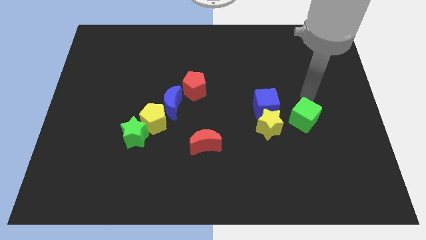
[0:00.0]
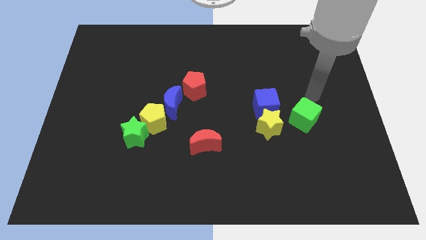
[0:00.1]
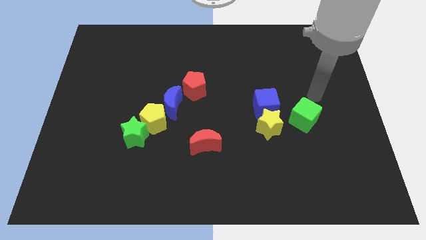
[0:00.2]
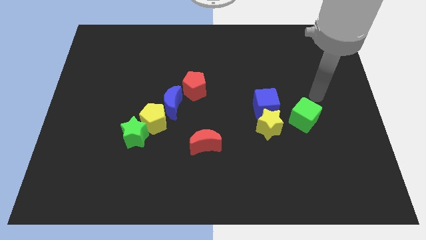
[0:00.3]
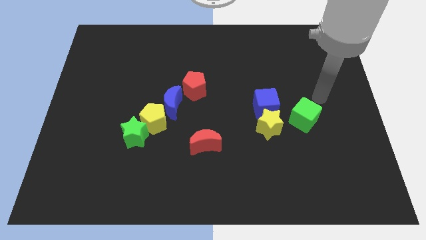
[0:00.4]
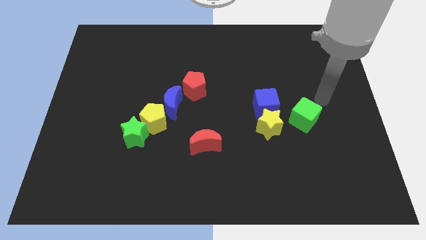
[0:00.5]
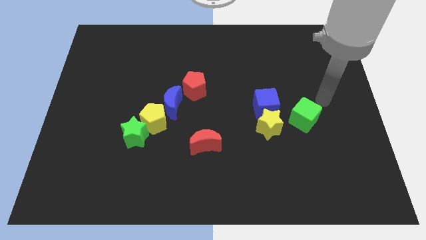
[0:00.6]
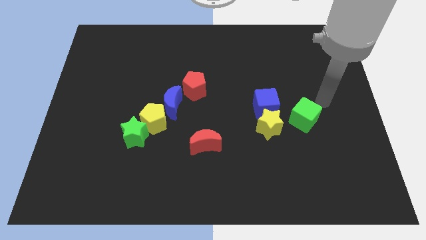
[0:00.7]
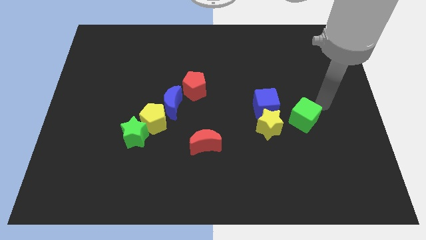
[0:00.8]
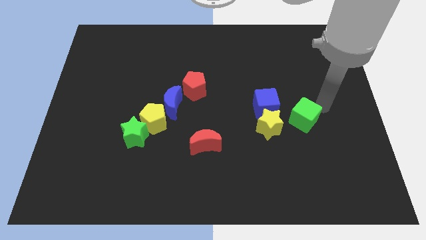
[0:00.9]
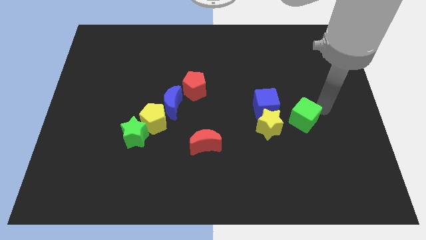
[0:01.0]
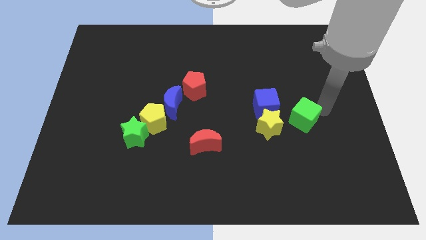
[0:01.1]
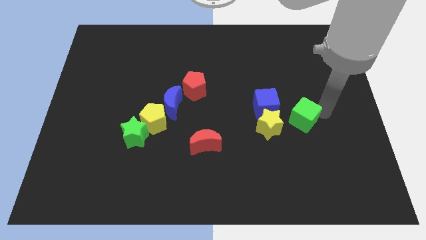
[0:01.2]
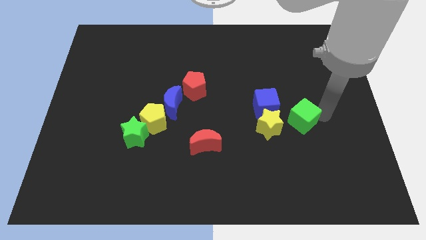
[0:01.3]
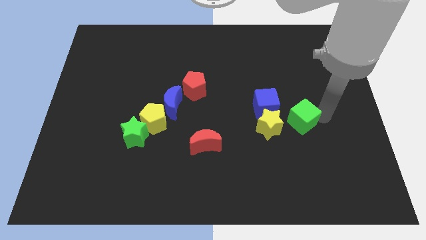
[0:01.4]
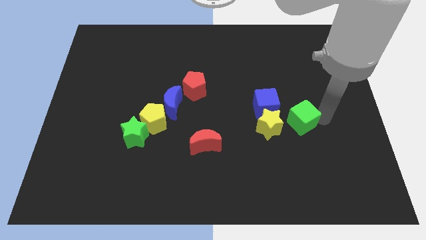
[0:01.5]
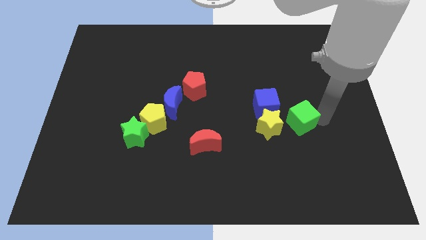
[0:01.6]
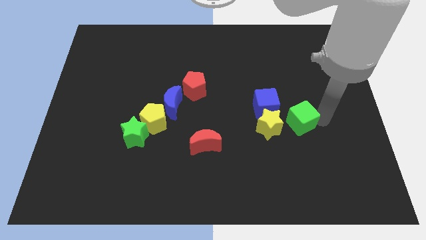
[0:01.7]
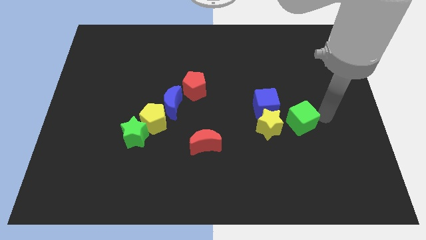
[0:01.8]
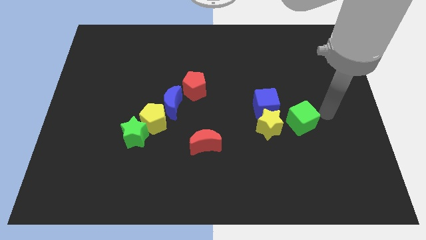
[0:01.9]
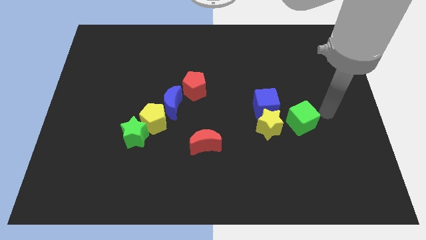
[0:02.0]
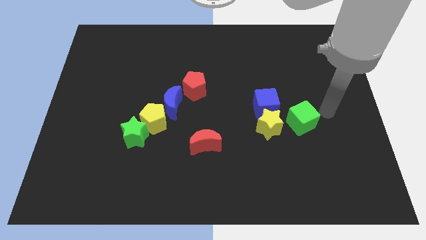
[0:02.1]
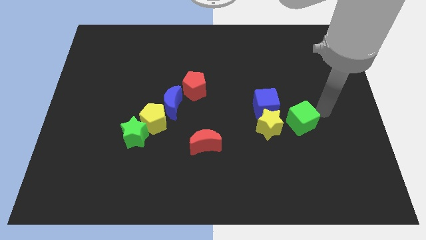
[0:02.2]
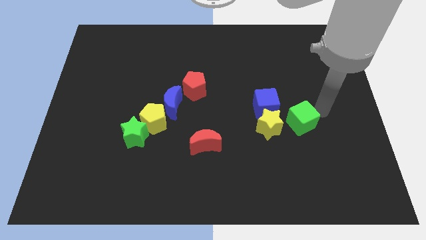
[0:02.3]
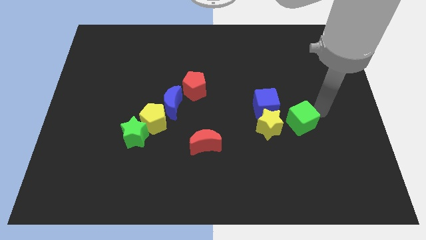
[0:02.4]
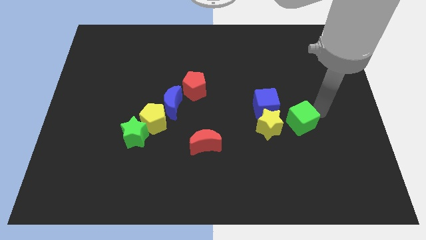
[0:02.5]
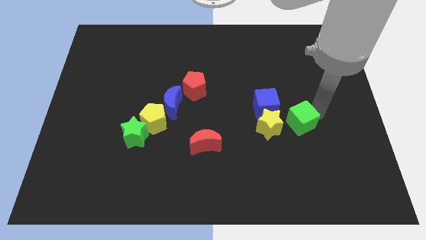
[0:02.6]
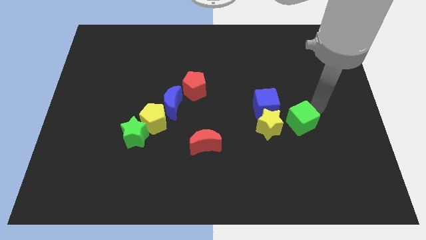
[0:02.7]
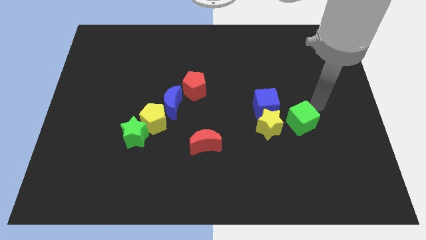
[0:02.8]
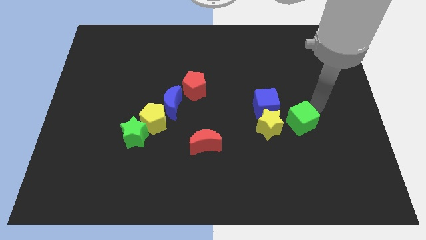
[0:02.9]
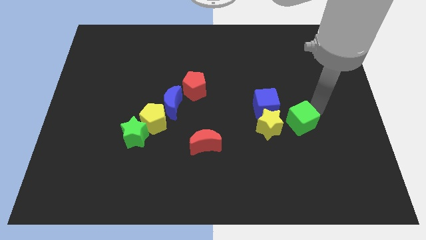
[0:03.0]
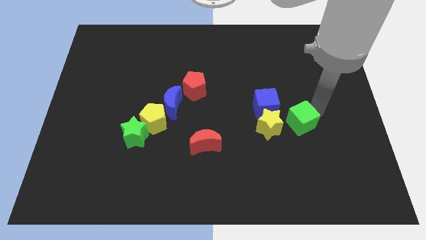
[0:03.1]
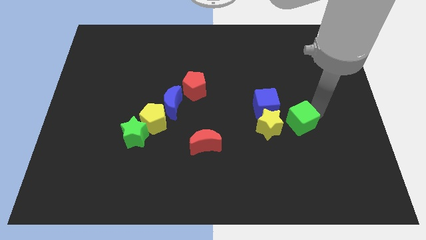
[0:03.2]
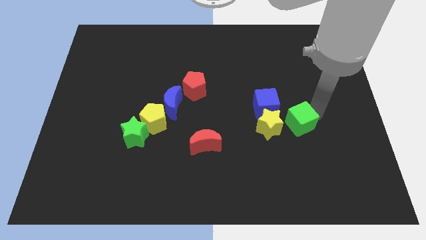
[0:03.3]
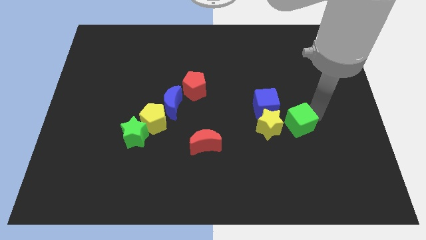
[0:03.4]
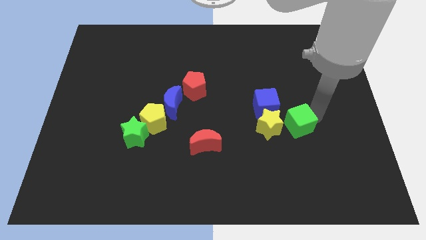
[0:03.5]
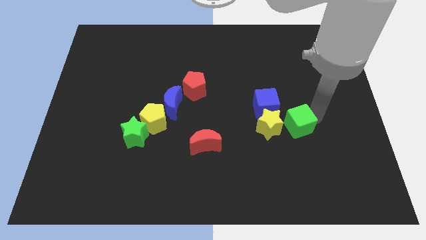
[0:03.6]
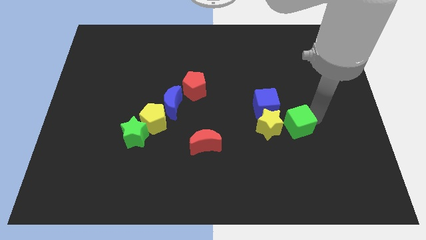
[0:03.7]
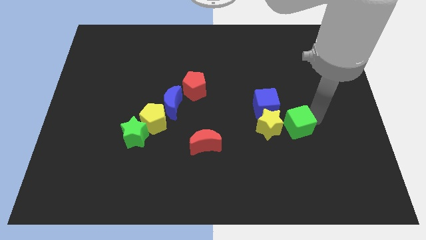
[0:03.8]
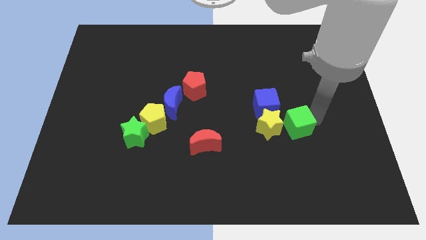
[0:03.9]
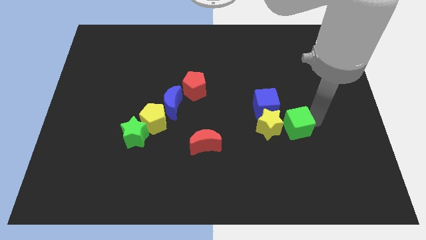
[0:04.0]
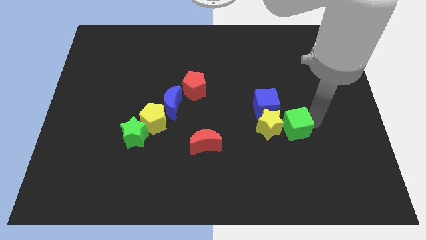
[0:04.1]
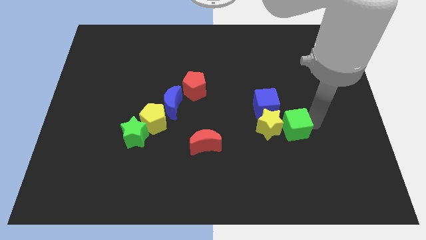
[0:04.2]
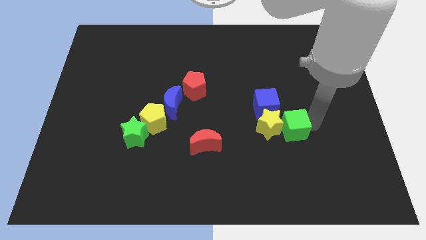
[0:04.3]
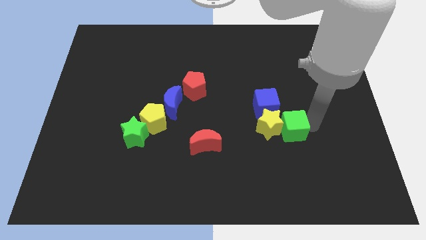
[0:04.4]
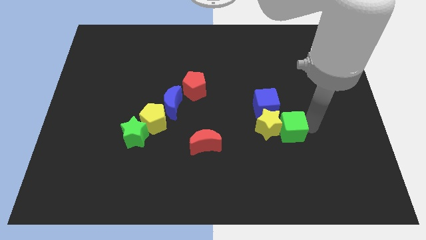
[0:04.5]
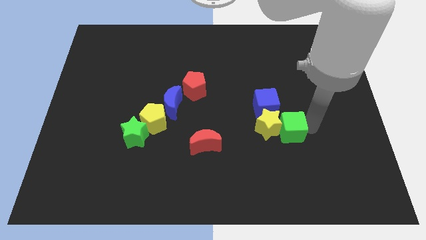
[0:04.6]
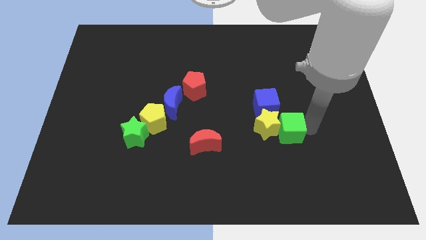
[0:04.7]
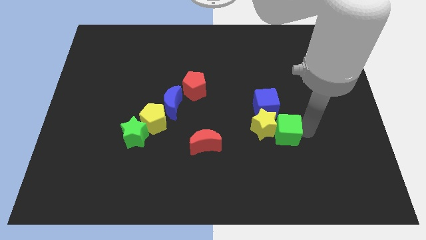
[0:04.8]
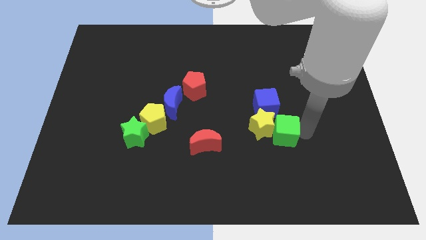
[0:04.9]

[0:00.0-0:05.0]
move the green cube into the yellow star

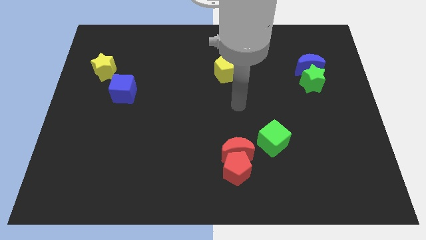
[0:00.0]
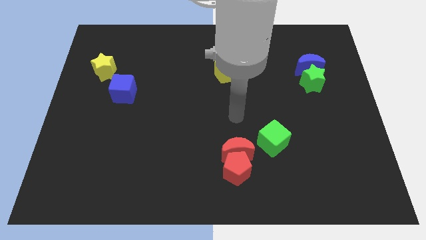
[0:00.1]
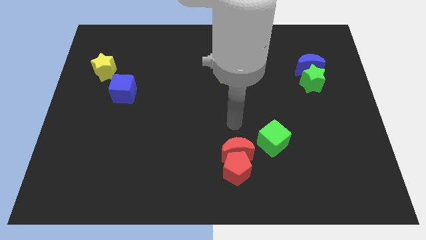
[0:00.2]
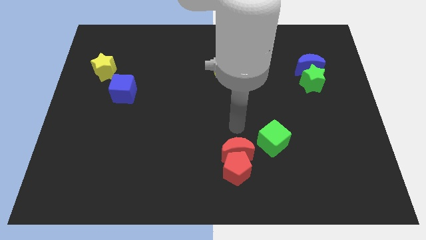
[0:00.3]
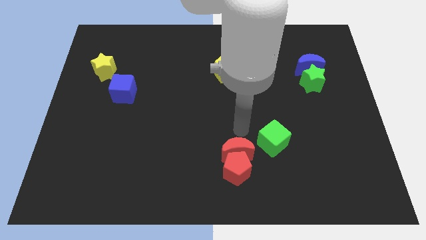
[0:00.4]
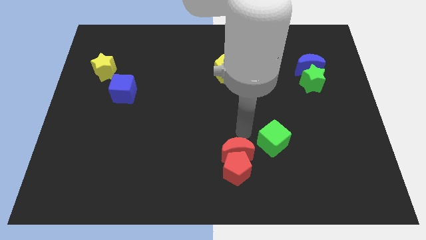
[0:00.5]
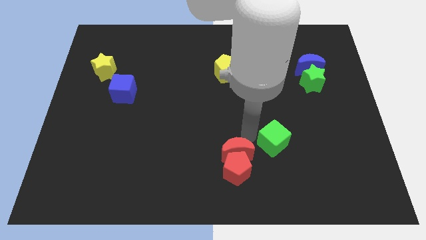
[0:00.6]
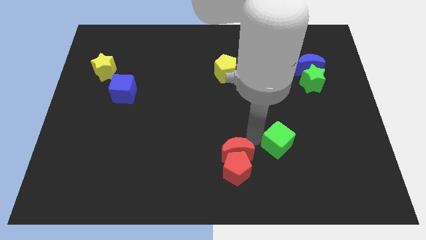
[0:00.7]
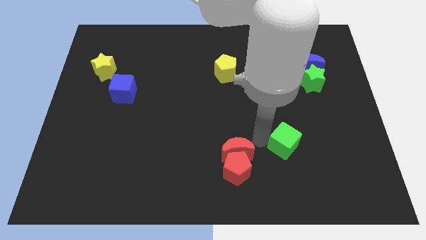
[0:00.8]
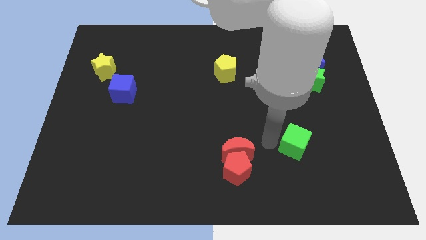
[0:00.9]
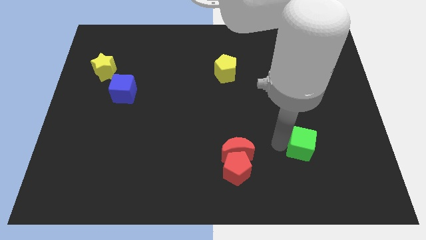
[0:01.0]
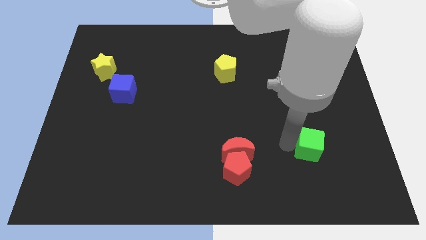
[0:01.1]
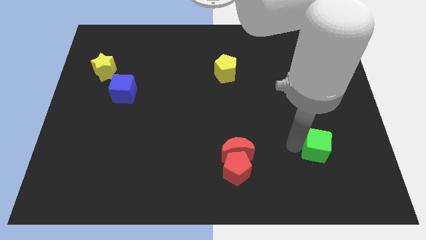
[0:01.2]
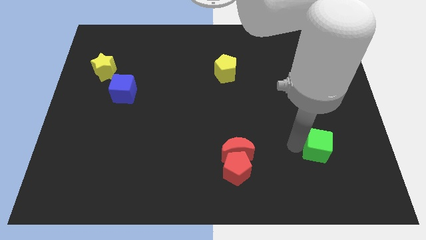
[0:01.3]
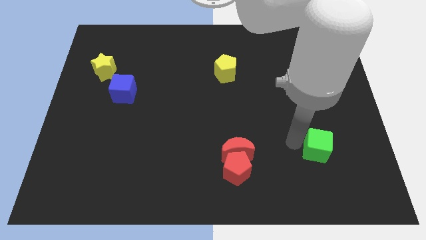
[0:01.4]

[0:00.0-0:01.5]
place the green cube to the right of red crescent

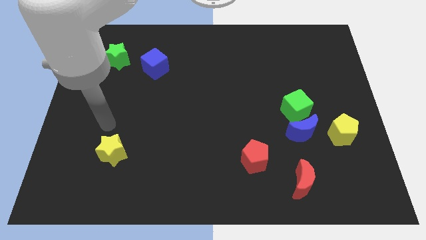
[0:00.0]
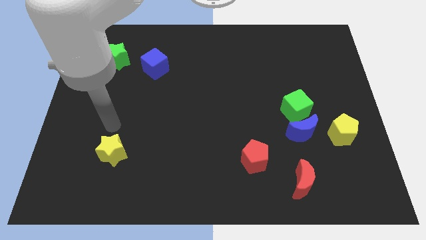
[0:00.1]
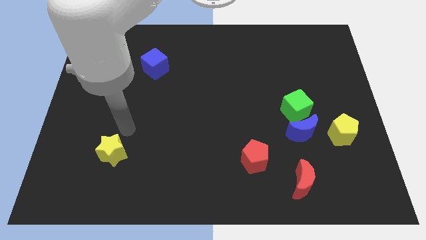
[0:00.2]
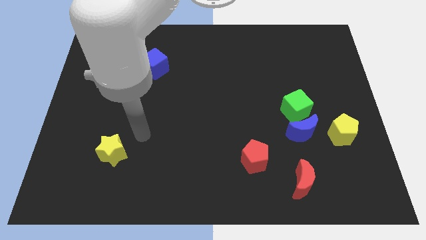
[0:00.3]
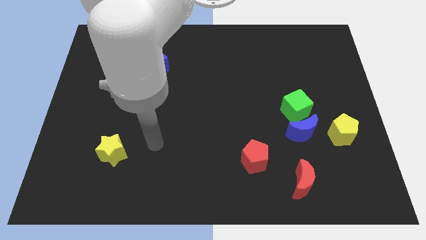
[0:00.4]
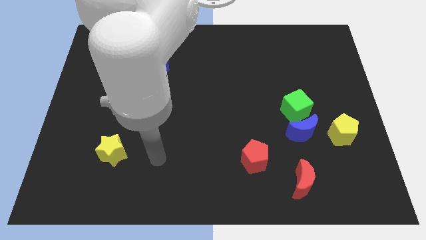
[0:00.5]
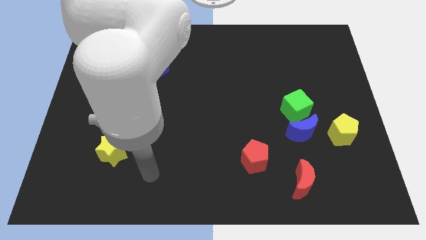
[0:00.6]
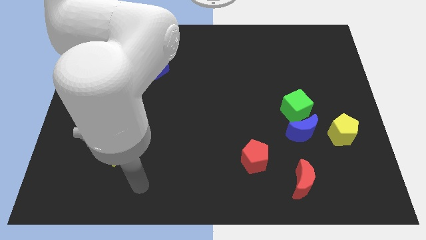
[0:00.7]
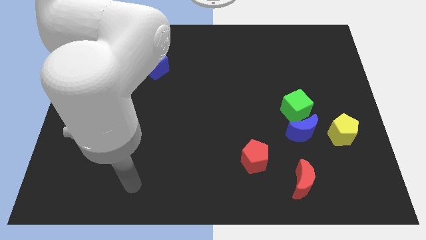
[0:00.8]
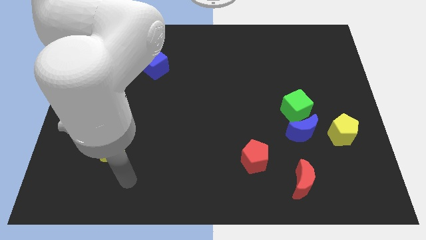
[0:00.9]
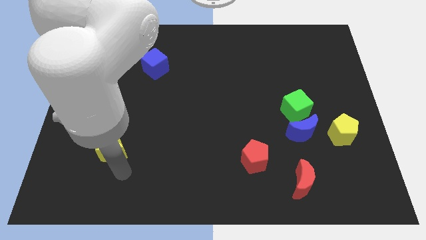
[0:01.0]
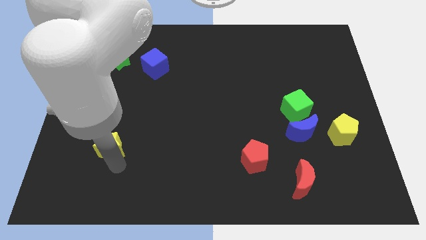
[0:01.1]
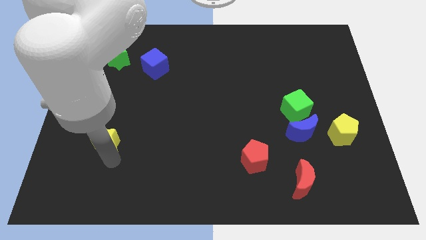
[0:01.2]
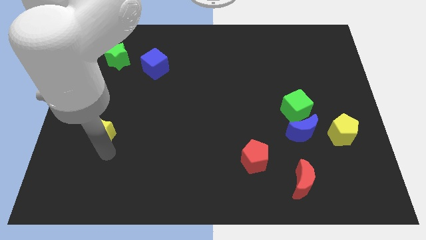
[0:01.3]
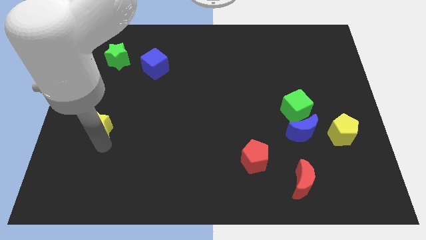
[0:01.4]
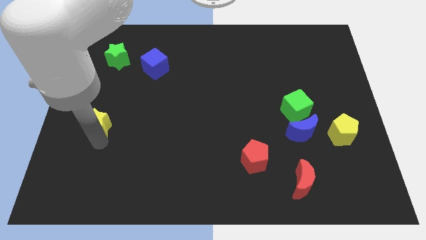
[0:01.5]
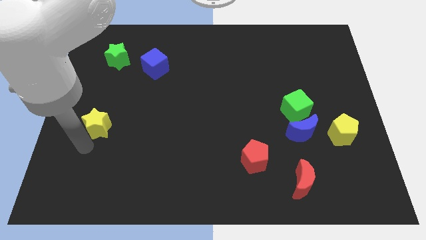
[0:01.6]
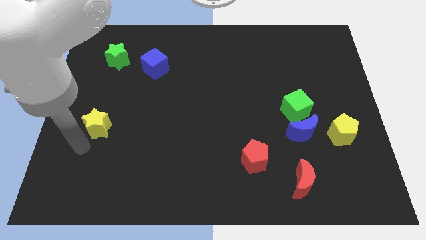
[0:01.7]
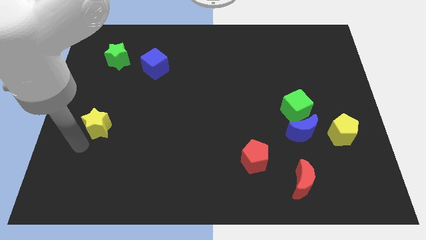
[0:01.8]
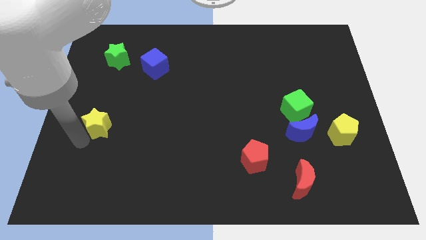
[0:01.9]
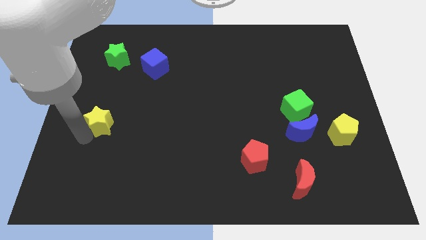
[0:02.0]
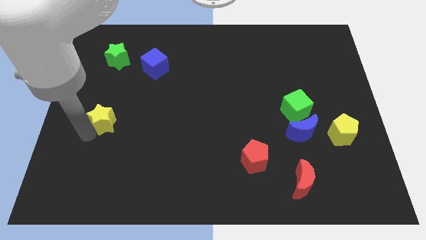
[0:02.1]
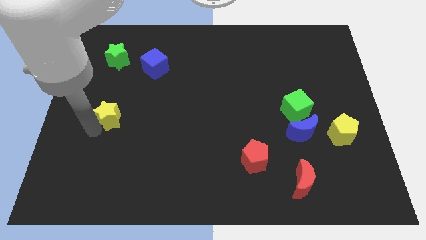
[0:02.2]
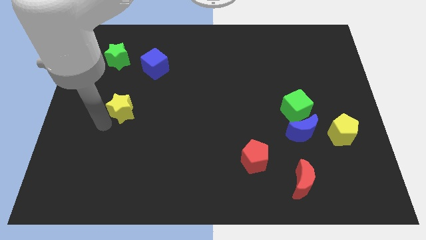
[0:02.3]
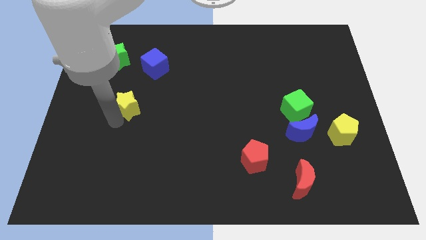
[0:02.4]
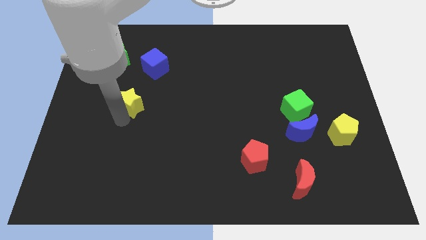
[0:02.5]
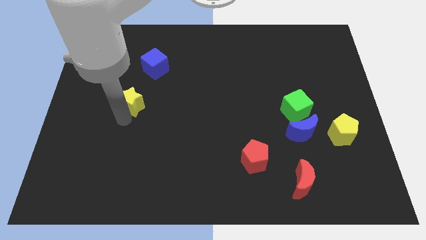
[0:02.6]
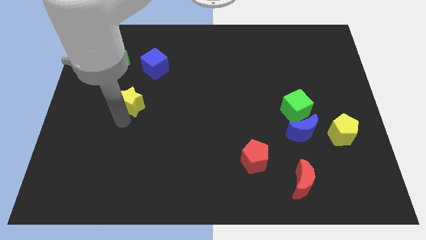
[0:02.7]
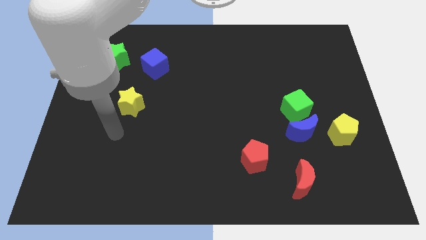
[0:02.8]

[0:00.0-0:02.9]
place the yellow star diagonal to the green star
